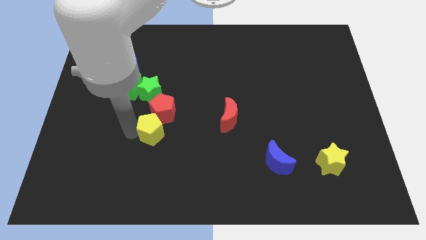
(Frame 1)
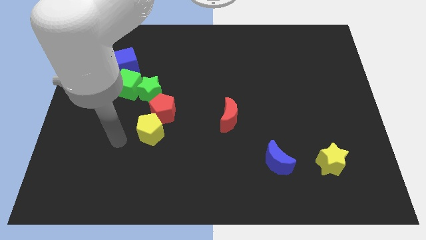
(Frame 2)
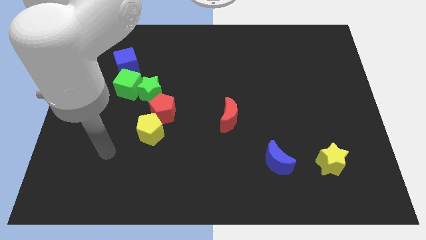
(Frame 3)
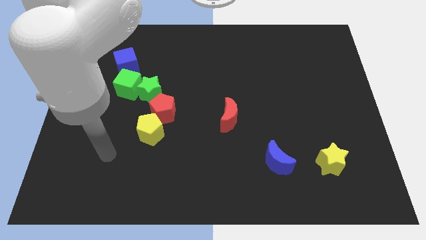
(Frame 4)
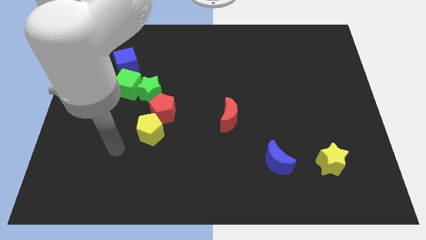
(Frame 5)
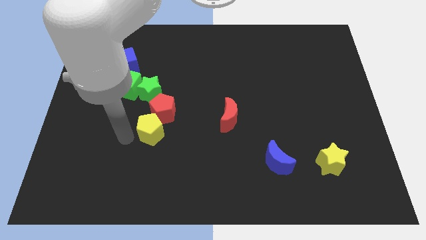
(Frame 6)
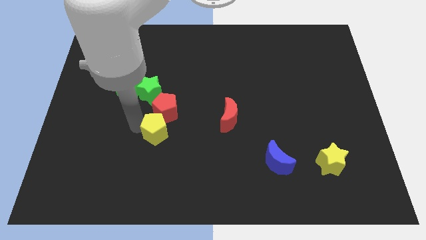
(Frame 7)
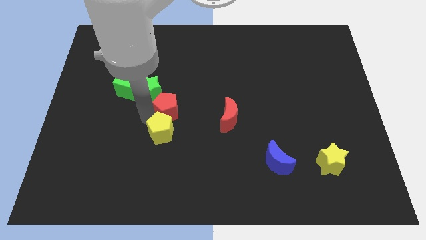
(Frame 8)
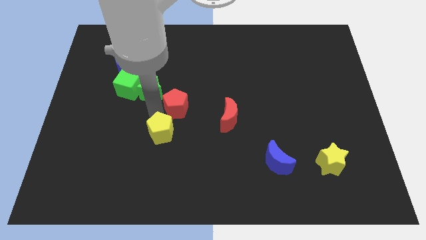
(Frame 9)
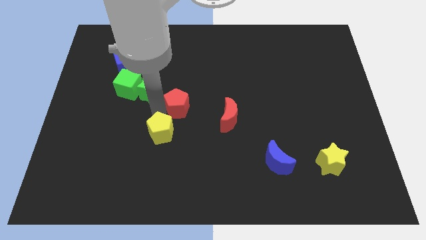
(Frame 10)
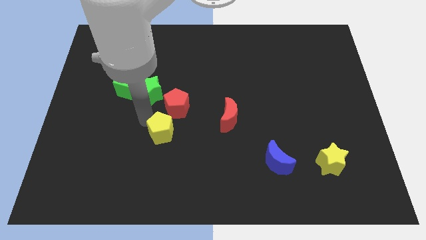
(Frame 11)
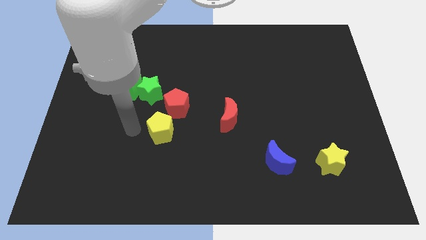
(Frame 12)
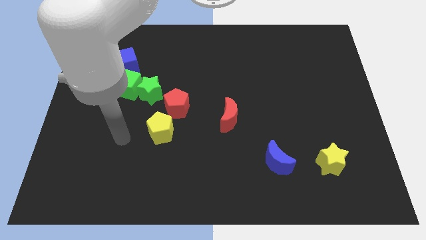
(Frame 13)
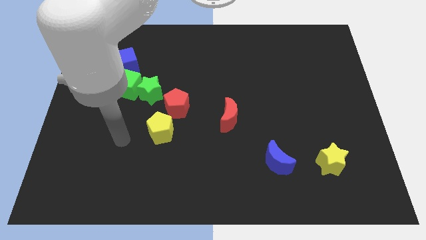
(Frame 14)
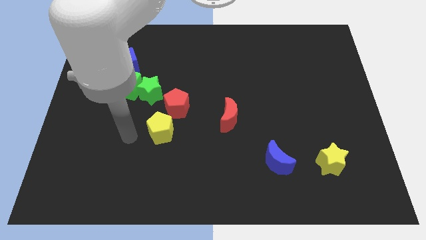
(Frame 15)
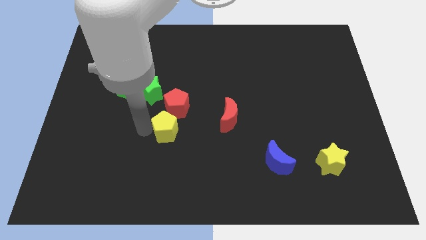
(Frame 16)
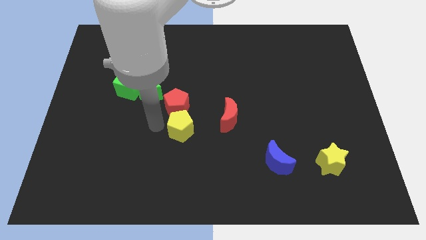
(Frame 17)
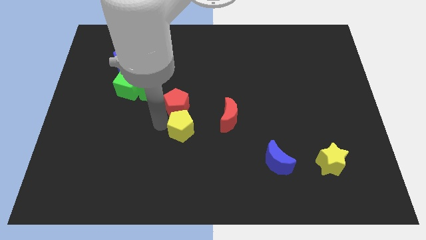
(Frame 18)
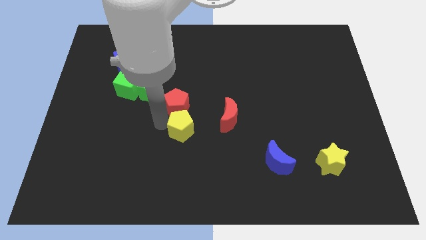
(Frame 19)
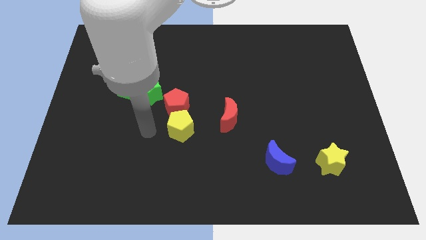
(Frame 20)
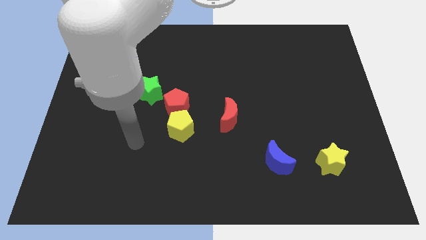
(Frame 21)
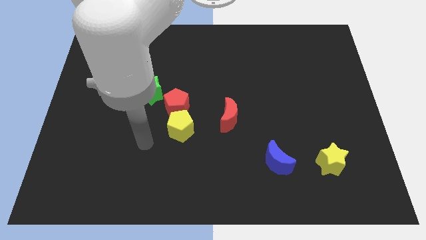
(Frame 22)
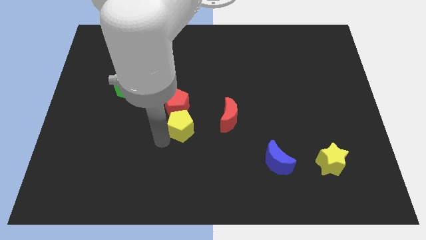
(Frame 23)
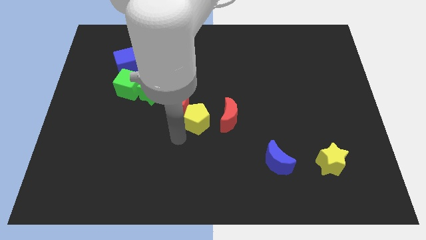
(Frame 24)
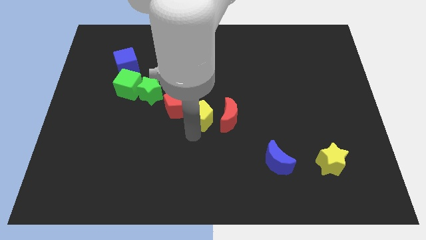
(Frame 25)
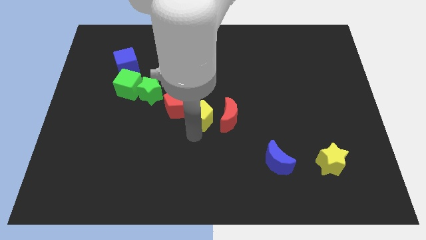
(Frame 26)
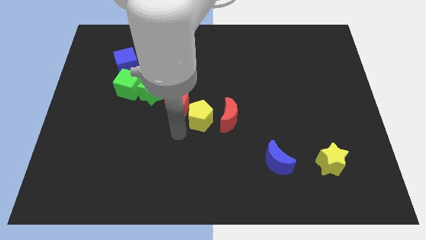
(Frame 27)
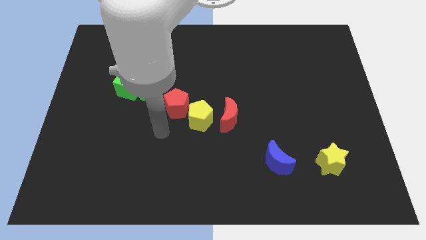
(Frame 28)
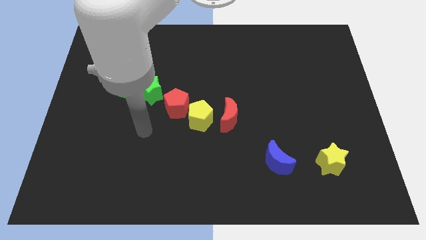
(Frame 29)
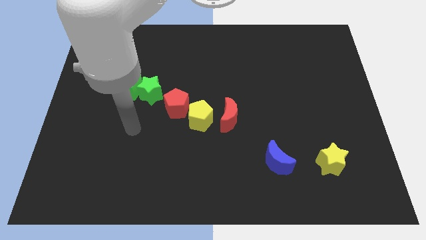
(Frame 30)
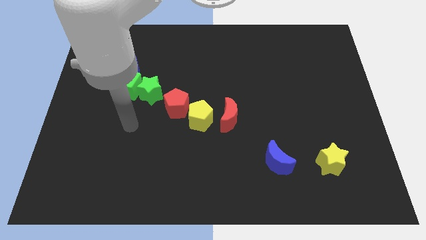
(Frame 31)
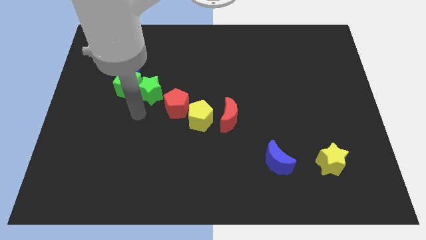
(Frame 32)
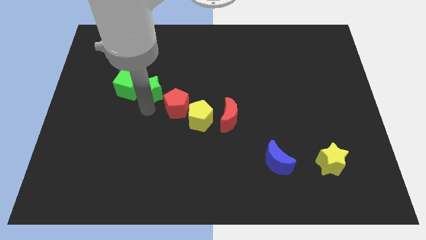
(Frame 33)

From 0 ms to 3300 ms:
put the yellow pentagon in between red blocks

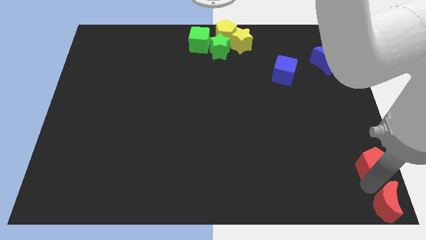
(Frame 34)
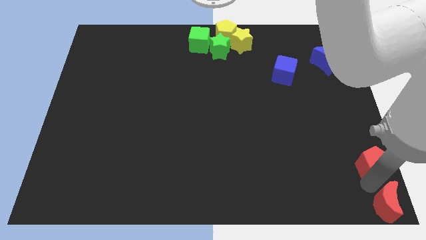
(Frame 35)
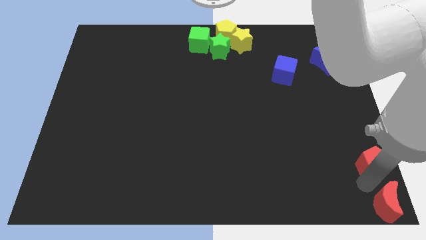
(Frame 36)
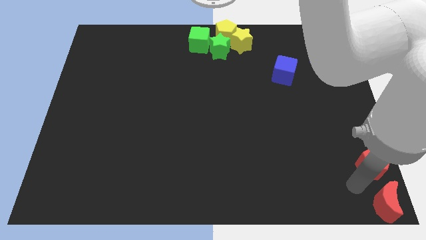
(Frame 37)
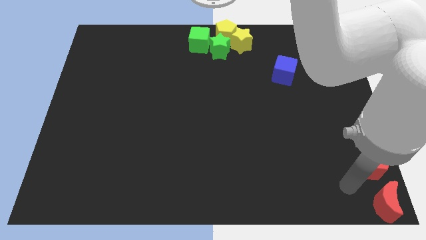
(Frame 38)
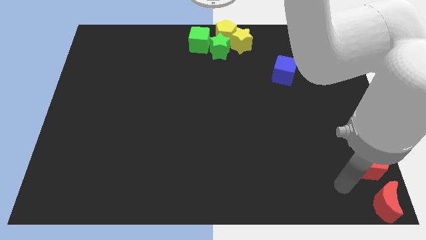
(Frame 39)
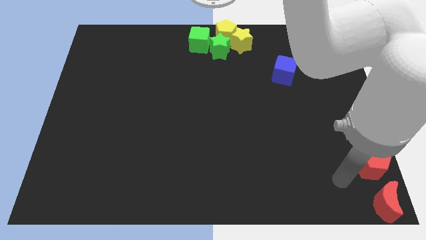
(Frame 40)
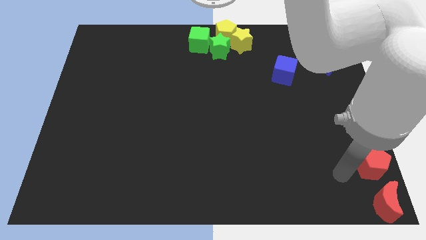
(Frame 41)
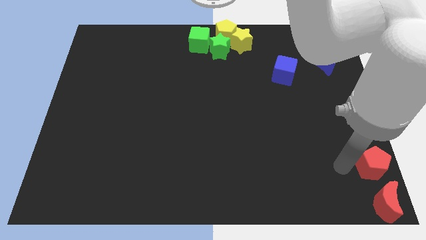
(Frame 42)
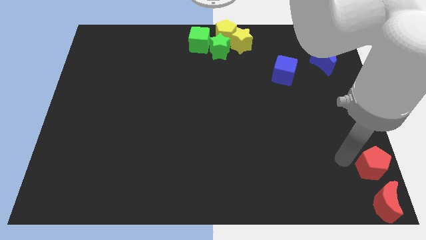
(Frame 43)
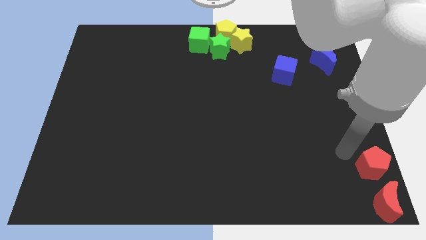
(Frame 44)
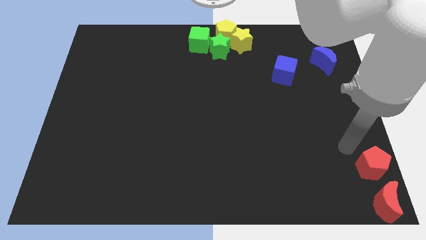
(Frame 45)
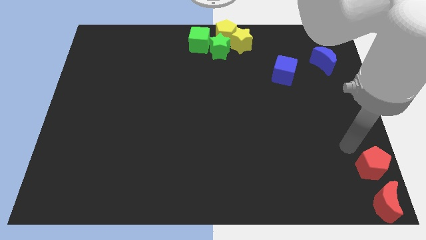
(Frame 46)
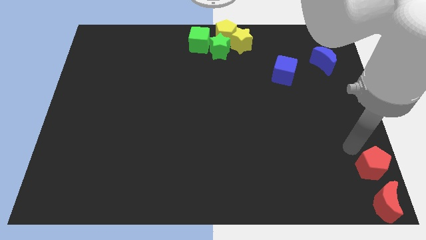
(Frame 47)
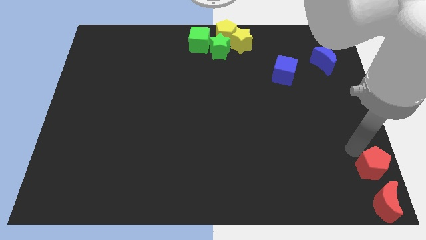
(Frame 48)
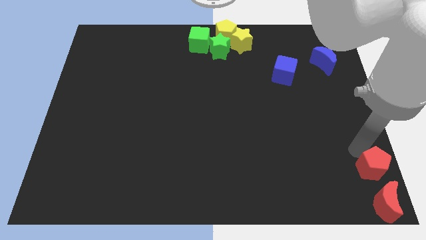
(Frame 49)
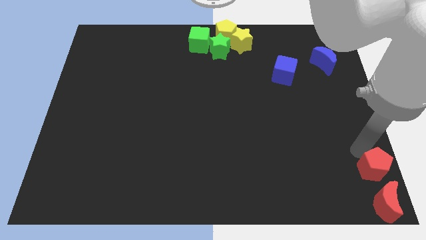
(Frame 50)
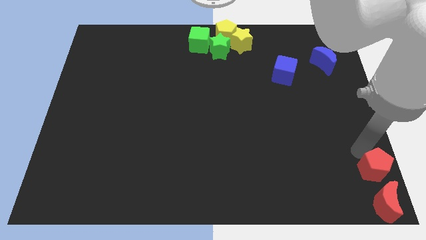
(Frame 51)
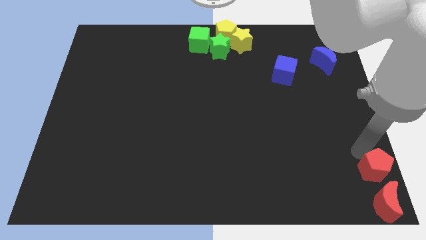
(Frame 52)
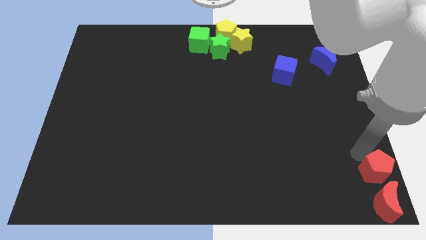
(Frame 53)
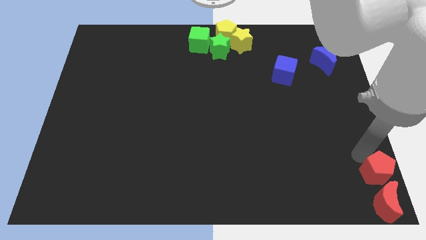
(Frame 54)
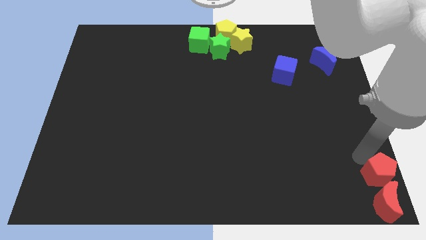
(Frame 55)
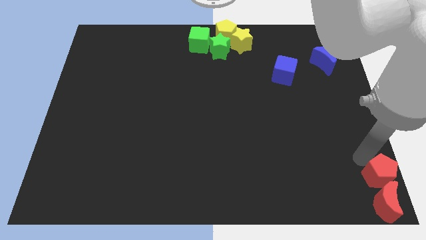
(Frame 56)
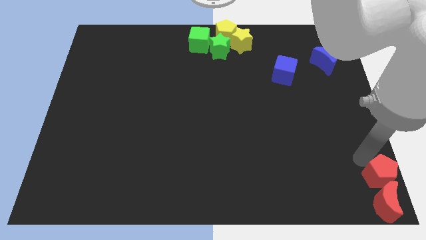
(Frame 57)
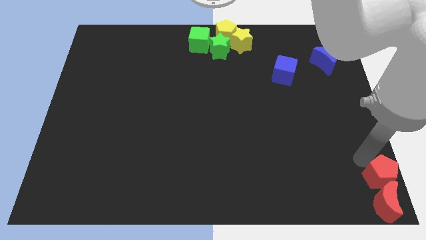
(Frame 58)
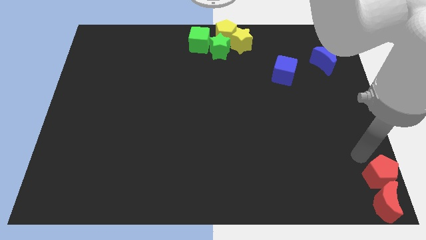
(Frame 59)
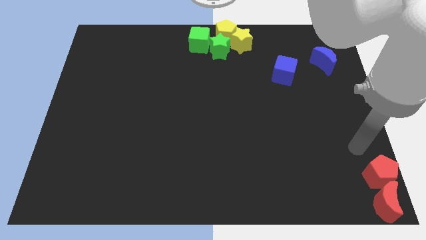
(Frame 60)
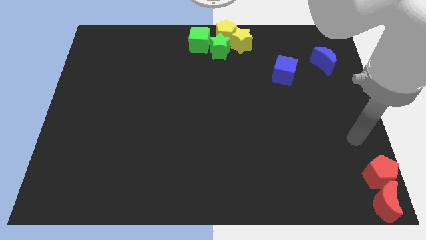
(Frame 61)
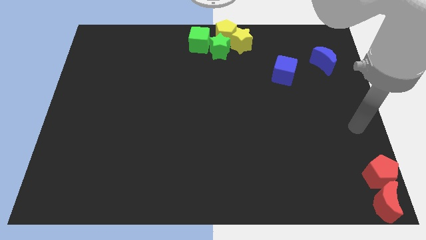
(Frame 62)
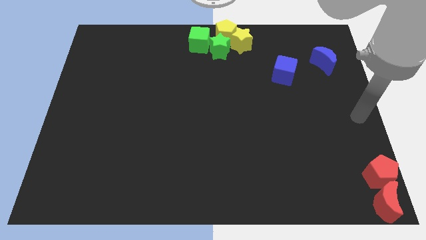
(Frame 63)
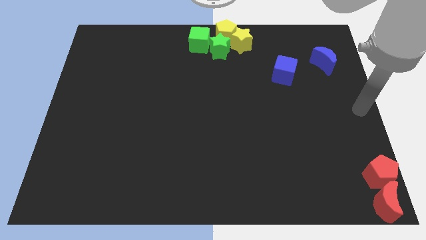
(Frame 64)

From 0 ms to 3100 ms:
push the red pentagon at the top of the red moon

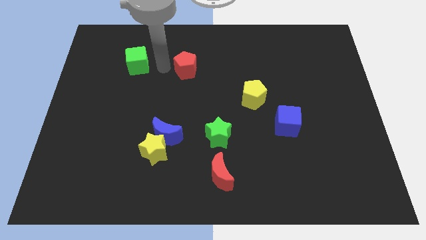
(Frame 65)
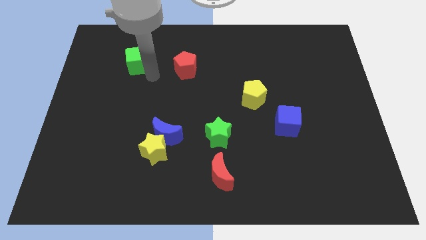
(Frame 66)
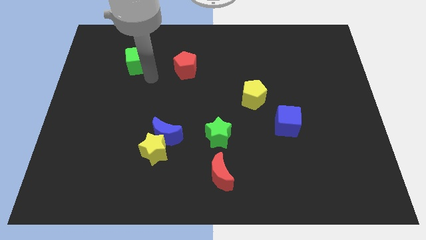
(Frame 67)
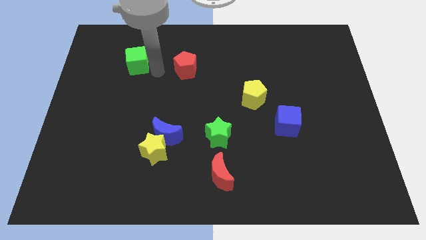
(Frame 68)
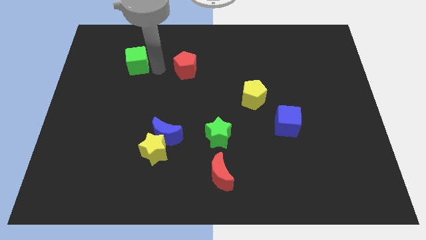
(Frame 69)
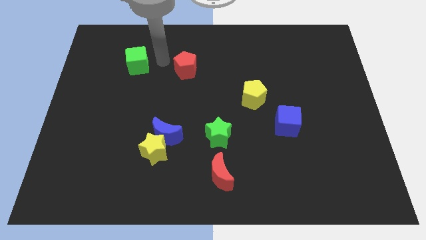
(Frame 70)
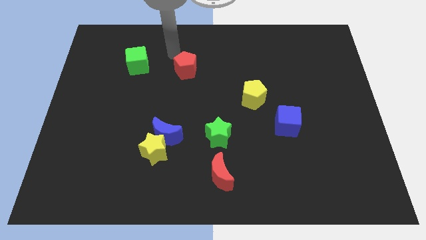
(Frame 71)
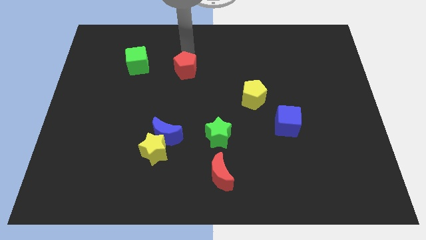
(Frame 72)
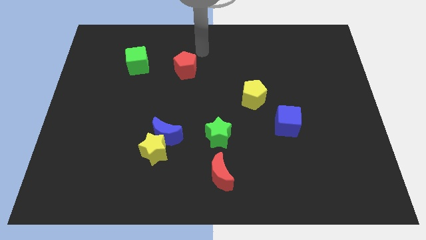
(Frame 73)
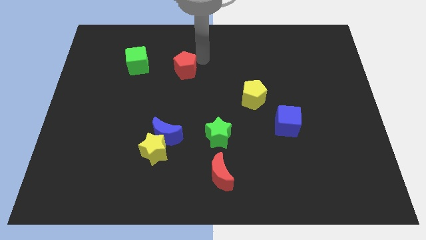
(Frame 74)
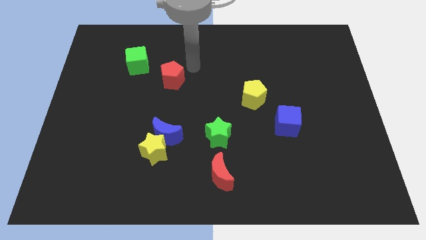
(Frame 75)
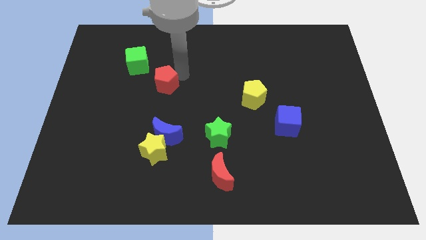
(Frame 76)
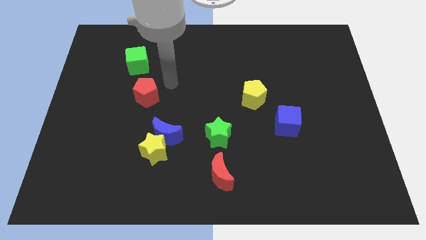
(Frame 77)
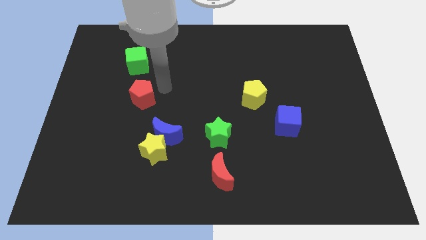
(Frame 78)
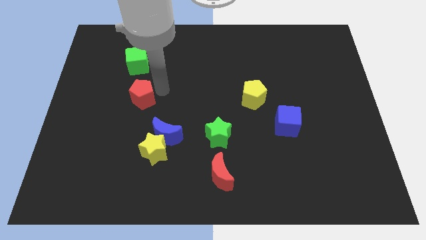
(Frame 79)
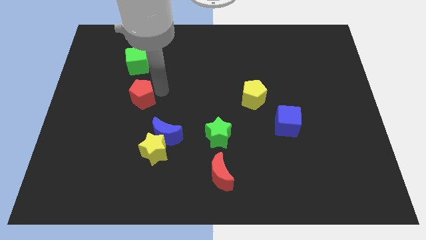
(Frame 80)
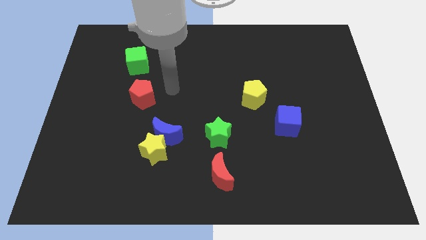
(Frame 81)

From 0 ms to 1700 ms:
put the red pentagon to the bottom right side of the green cube

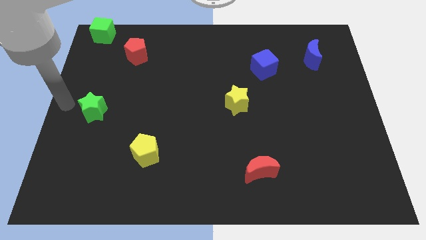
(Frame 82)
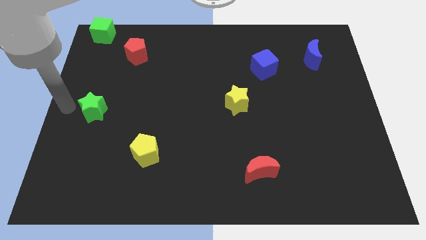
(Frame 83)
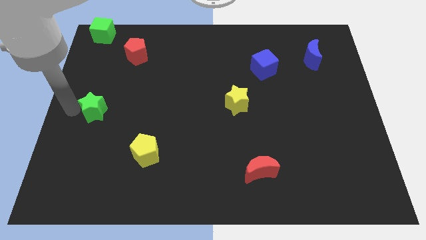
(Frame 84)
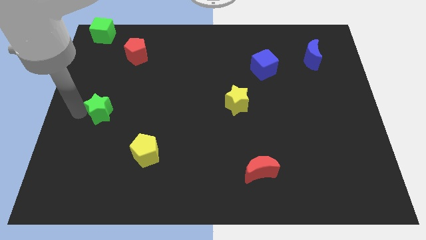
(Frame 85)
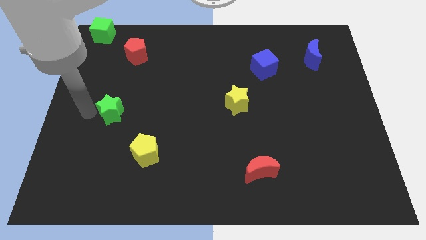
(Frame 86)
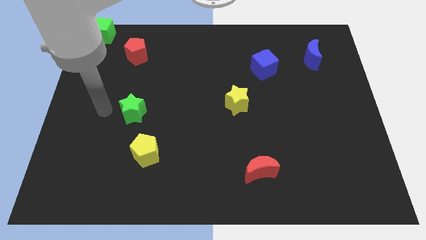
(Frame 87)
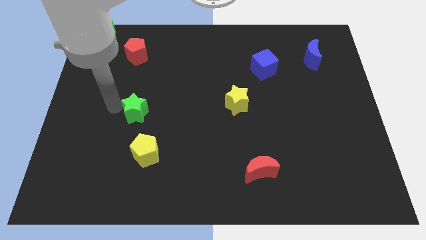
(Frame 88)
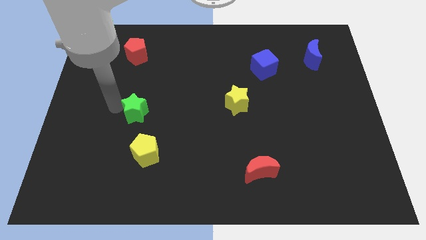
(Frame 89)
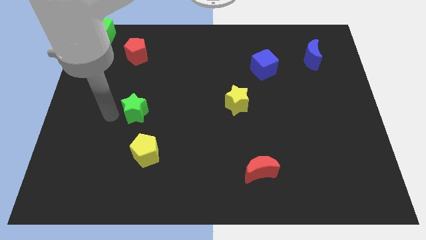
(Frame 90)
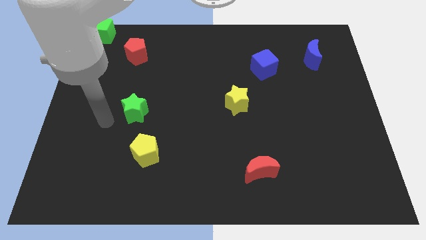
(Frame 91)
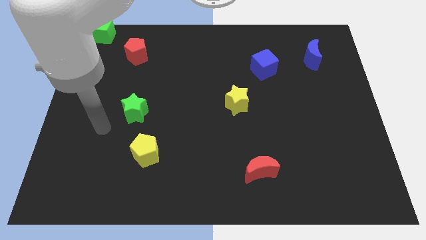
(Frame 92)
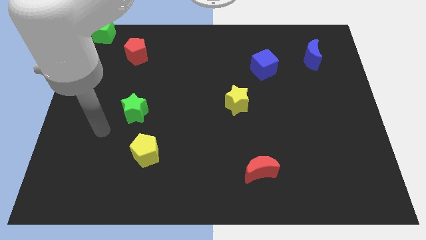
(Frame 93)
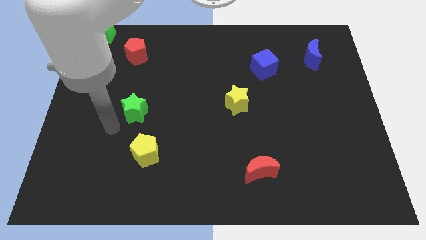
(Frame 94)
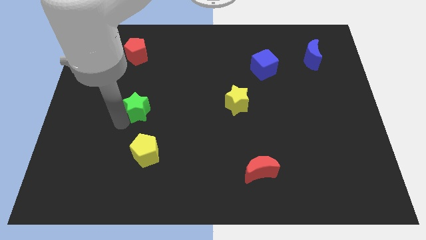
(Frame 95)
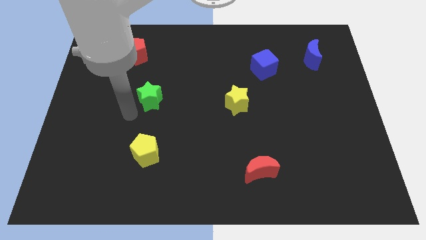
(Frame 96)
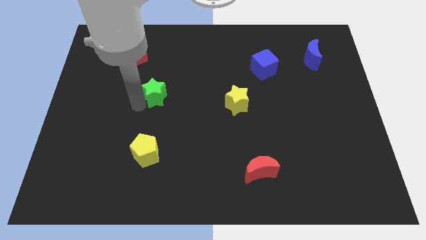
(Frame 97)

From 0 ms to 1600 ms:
place the green star above the yellow pentagon
